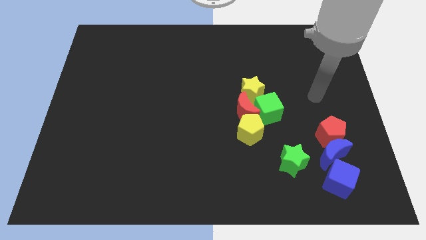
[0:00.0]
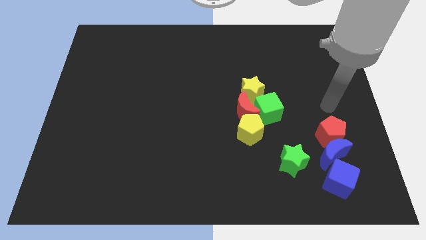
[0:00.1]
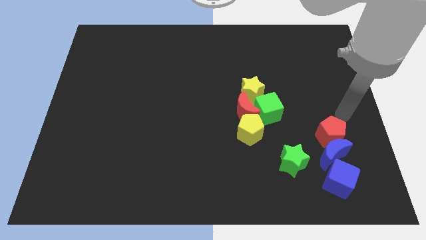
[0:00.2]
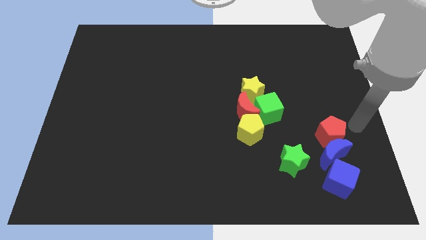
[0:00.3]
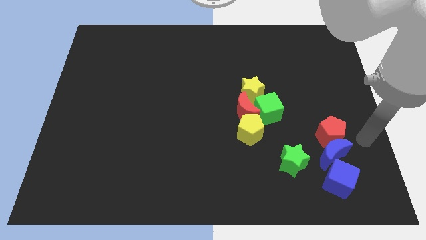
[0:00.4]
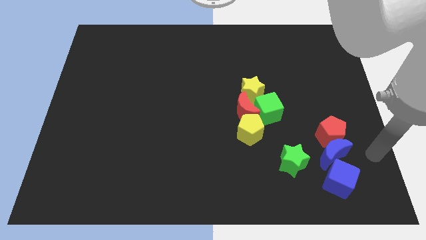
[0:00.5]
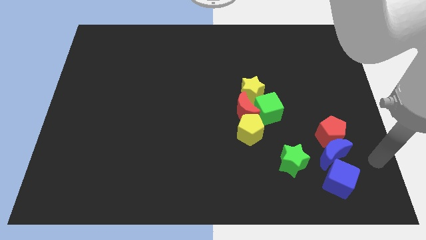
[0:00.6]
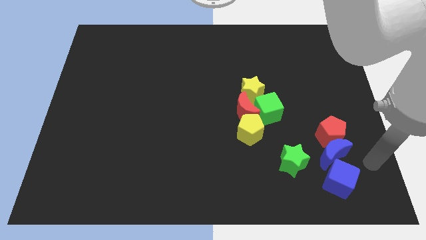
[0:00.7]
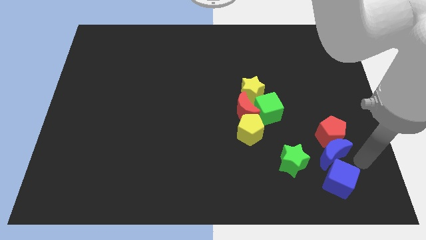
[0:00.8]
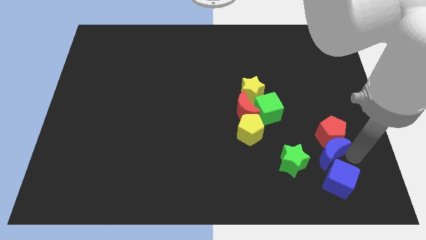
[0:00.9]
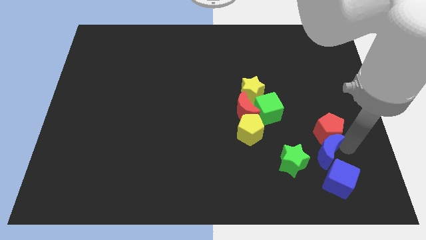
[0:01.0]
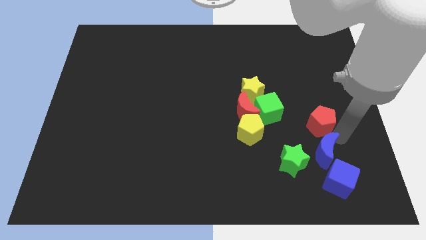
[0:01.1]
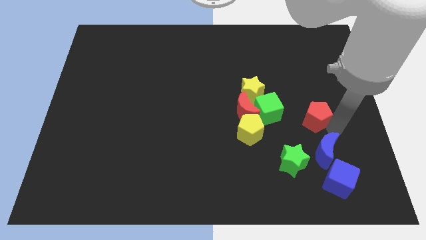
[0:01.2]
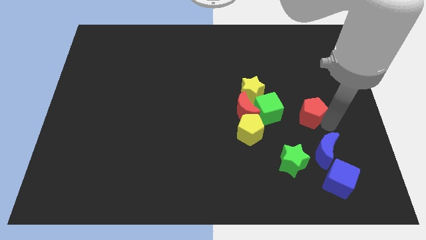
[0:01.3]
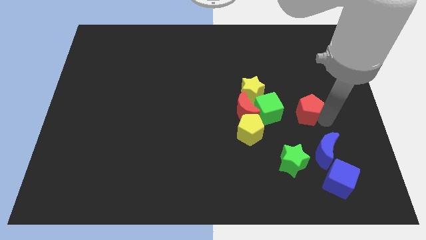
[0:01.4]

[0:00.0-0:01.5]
separate blue moon and red pentagon

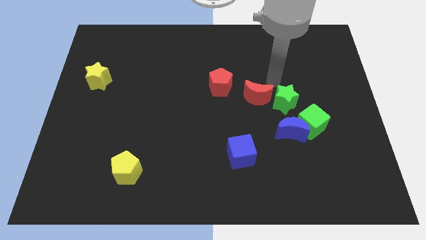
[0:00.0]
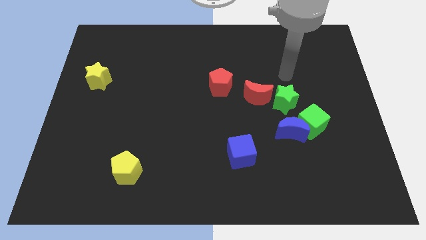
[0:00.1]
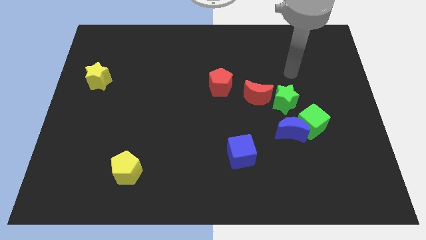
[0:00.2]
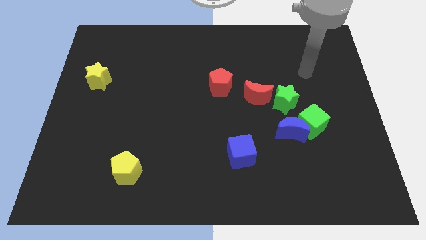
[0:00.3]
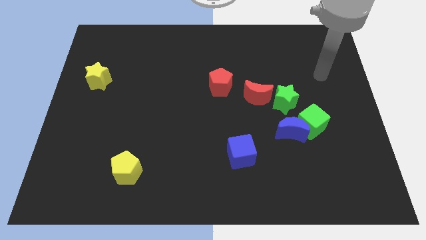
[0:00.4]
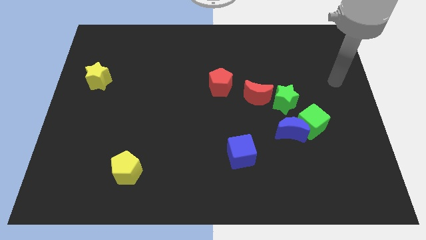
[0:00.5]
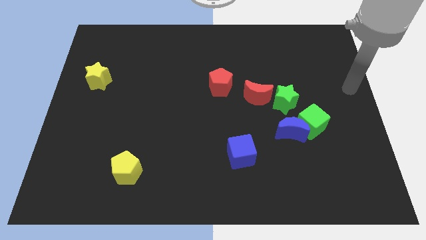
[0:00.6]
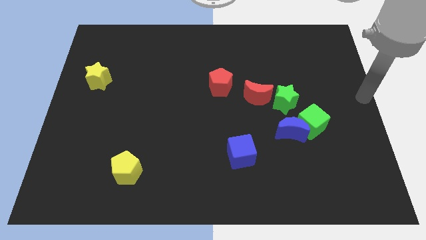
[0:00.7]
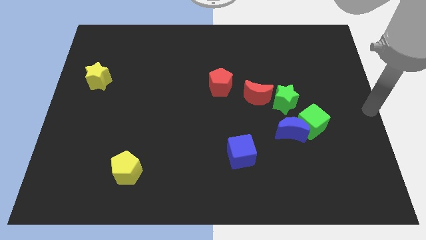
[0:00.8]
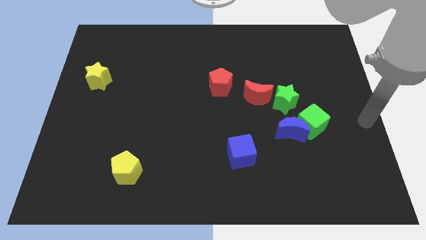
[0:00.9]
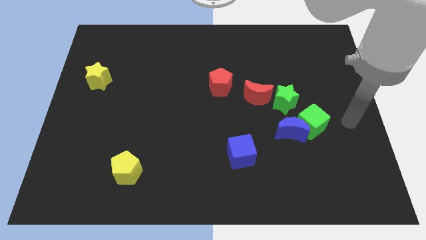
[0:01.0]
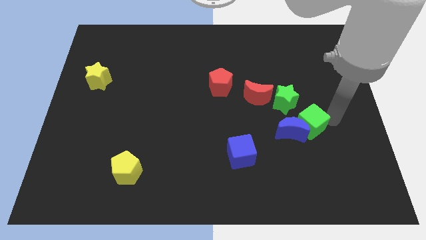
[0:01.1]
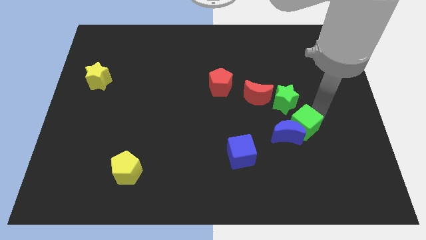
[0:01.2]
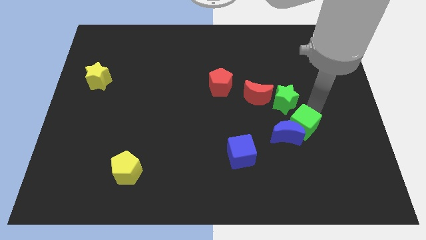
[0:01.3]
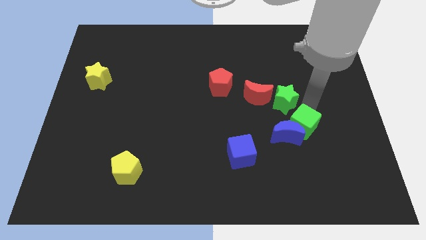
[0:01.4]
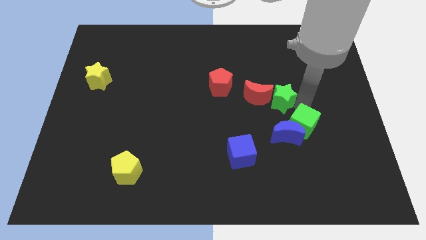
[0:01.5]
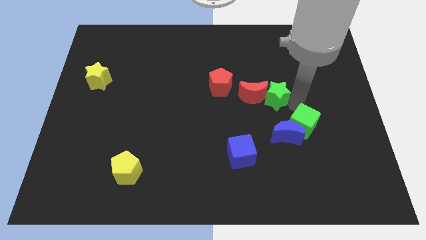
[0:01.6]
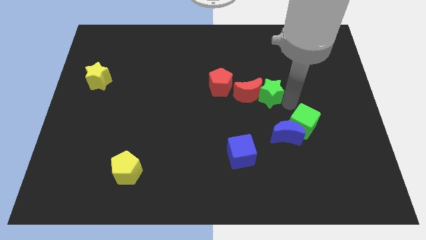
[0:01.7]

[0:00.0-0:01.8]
separate the green from green cube

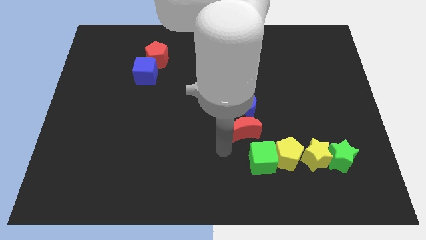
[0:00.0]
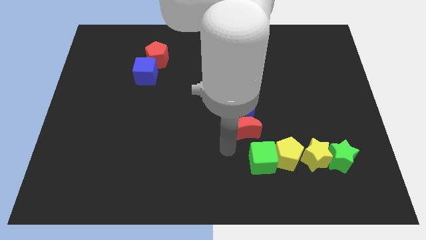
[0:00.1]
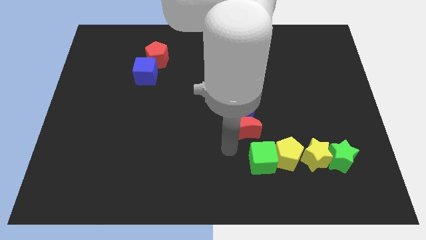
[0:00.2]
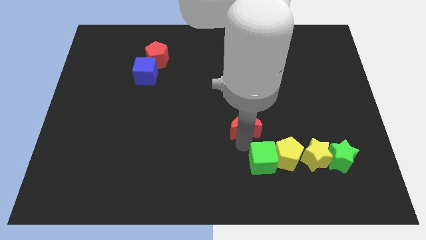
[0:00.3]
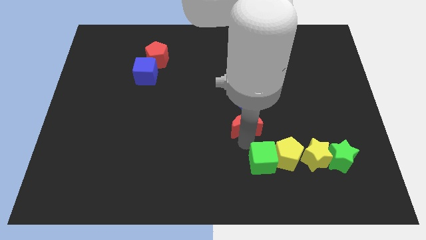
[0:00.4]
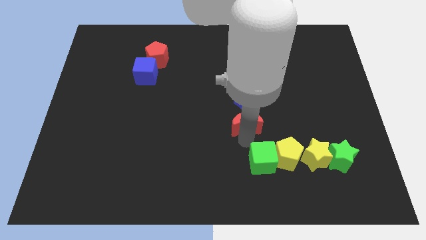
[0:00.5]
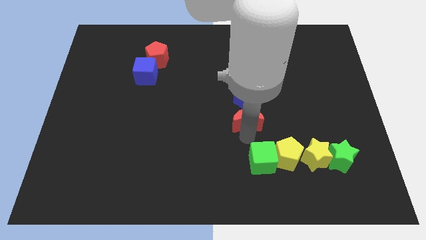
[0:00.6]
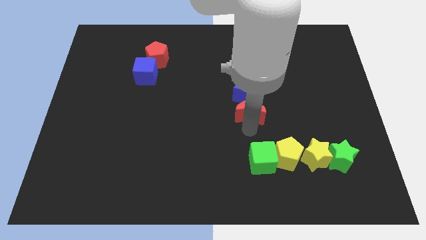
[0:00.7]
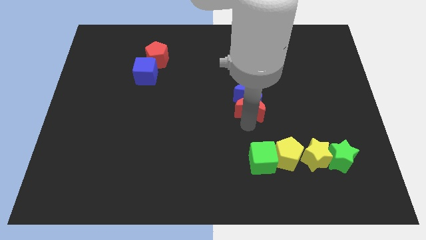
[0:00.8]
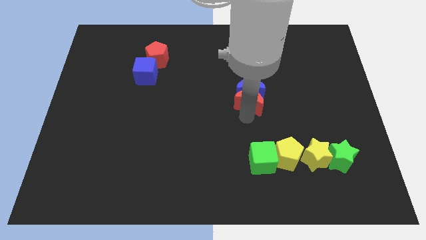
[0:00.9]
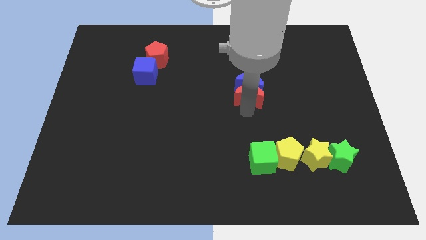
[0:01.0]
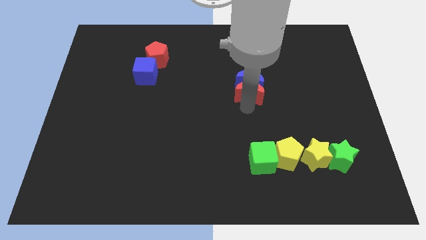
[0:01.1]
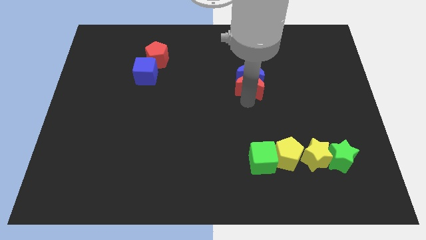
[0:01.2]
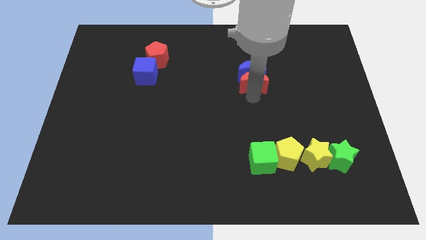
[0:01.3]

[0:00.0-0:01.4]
slide the red moon and the blue crescent towards the top

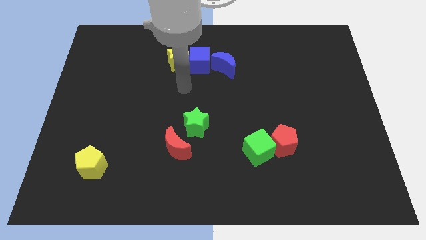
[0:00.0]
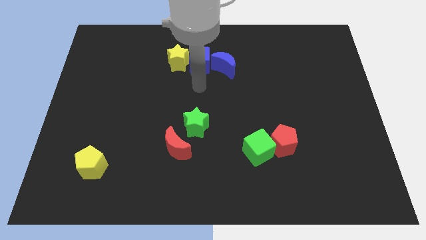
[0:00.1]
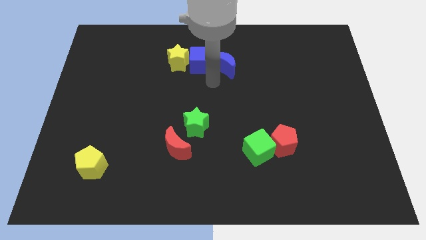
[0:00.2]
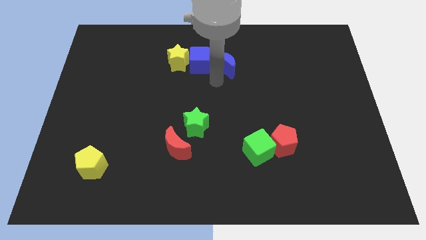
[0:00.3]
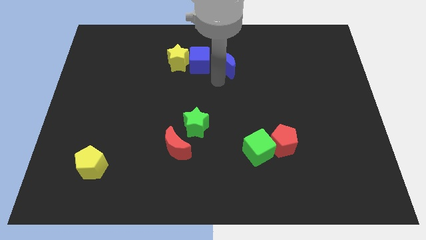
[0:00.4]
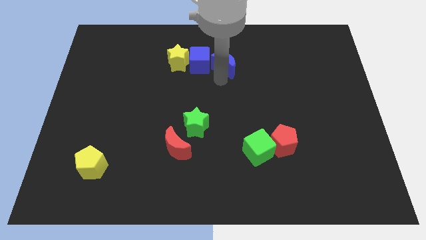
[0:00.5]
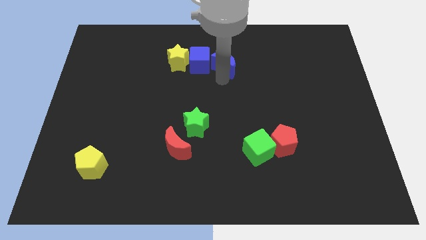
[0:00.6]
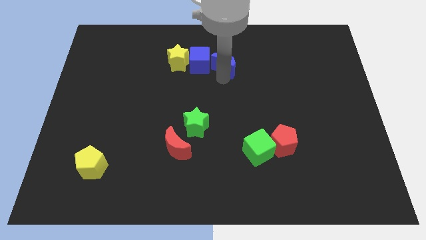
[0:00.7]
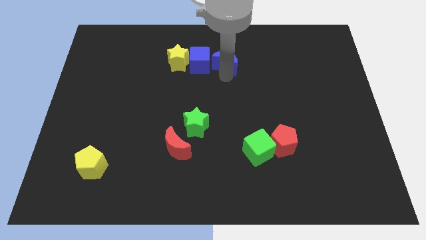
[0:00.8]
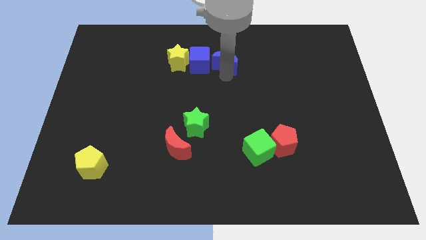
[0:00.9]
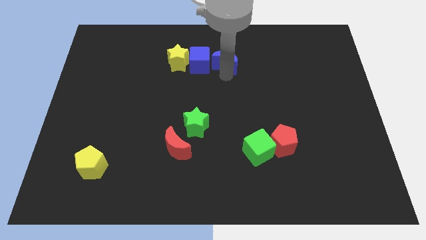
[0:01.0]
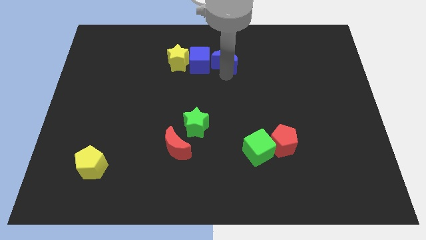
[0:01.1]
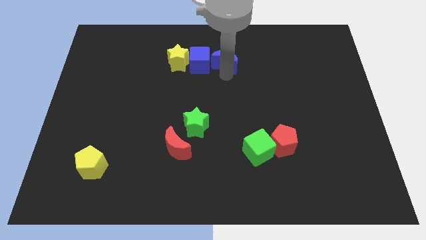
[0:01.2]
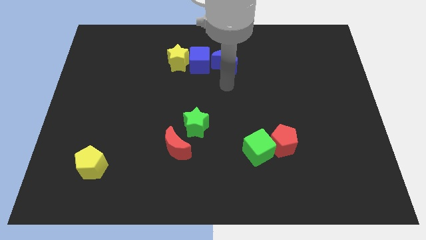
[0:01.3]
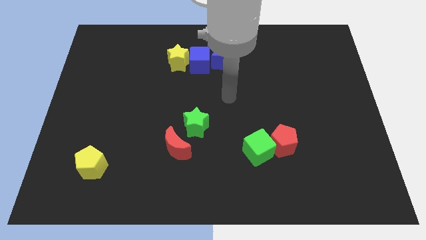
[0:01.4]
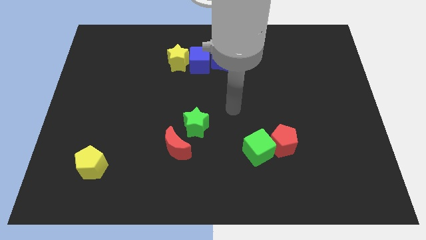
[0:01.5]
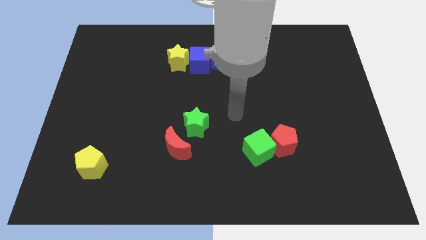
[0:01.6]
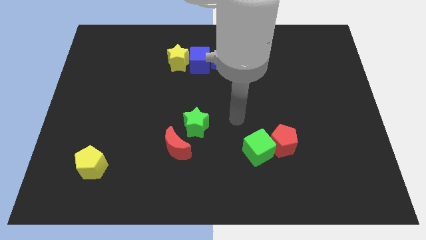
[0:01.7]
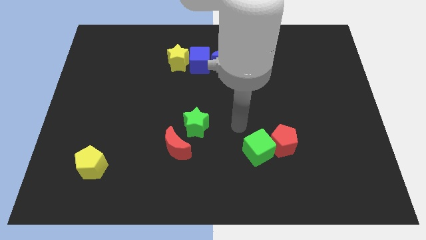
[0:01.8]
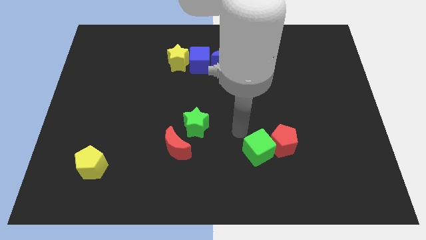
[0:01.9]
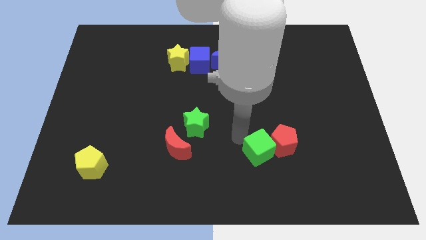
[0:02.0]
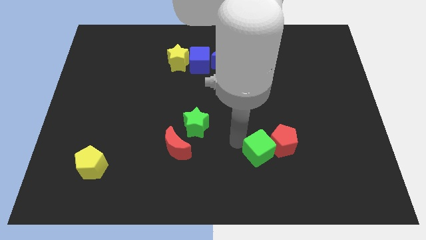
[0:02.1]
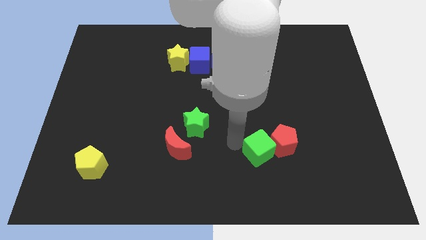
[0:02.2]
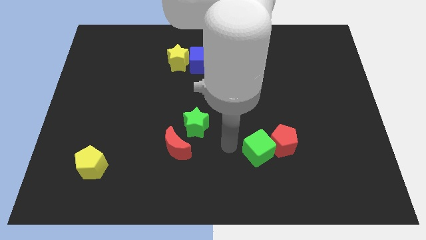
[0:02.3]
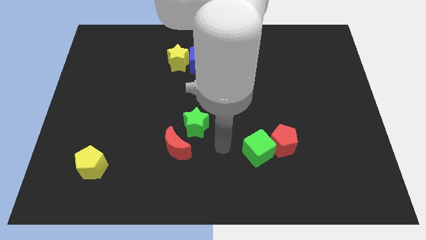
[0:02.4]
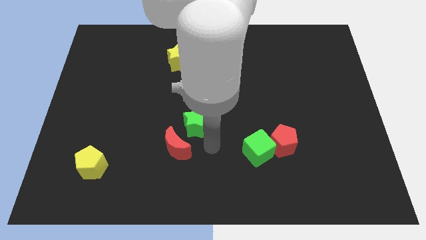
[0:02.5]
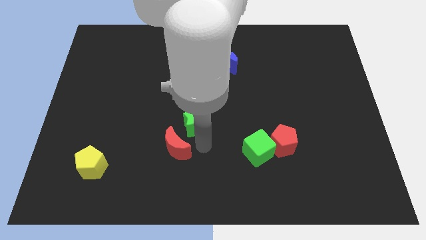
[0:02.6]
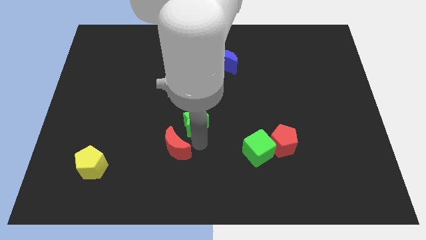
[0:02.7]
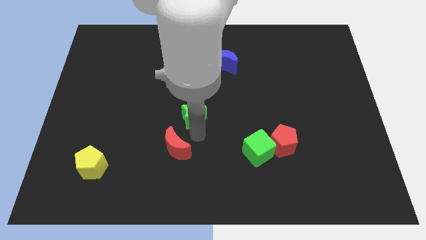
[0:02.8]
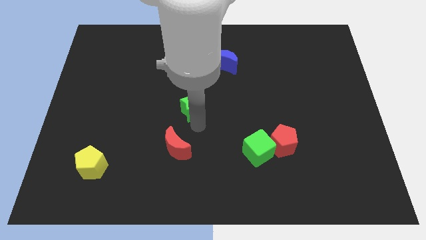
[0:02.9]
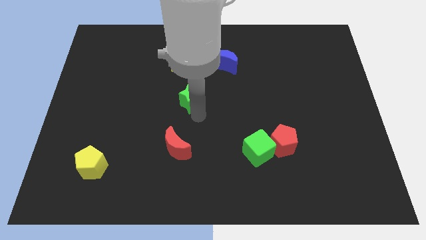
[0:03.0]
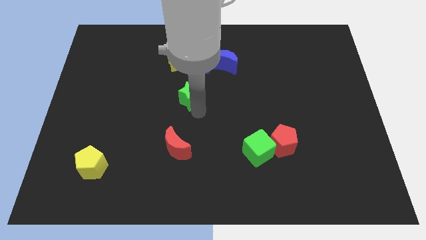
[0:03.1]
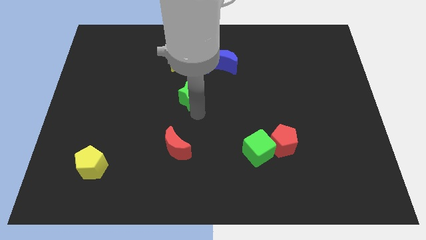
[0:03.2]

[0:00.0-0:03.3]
push the green star slightly up

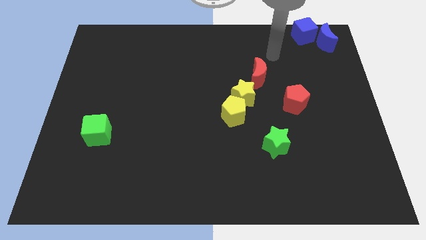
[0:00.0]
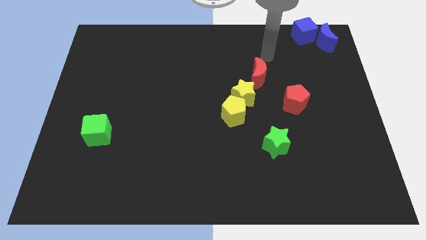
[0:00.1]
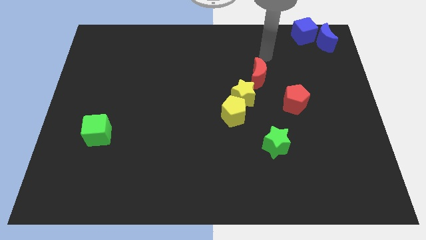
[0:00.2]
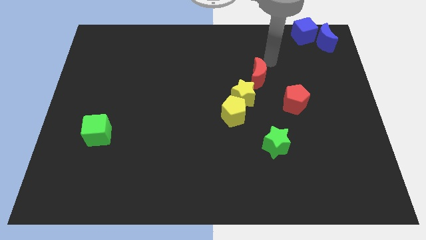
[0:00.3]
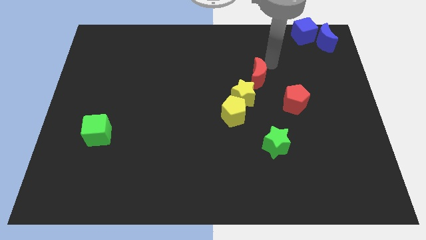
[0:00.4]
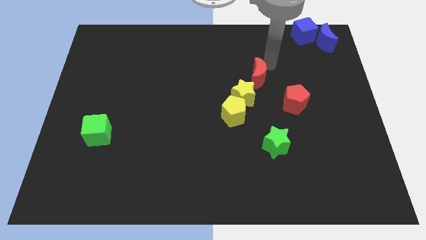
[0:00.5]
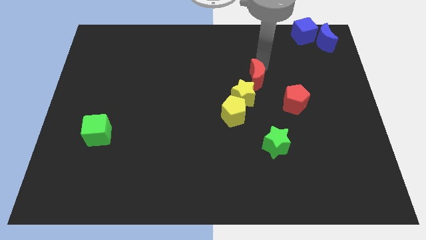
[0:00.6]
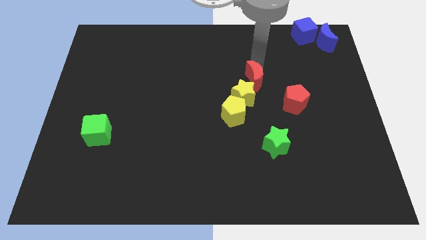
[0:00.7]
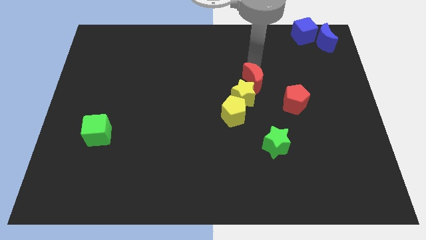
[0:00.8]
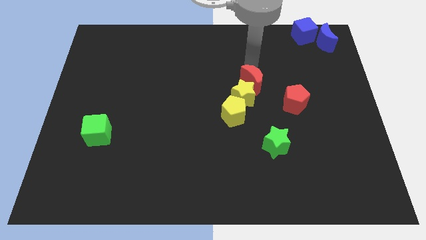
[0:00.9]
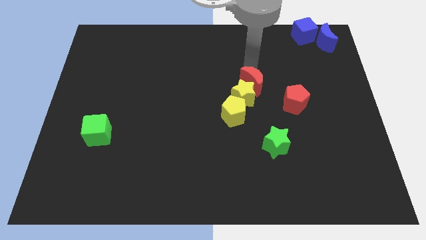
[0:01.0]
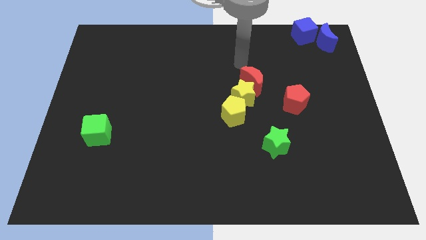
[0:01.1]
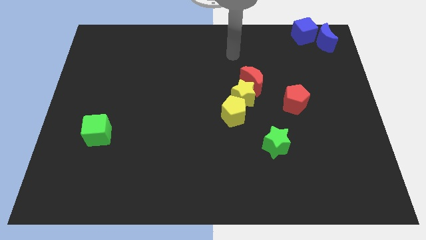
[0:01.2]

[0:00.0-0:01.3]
push the red crescent into the yellow star
